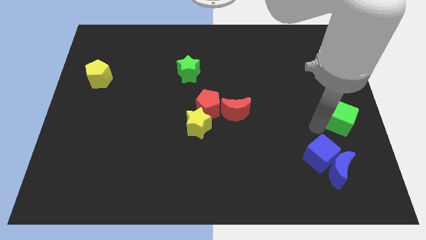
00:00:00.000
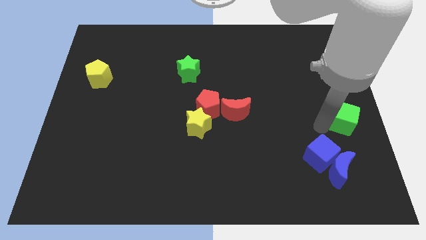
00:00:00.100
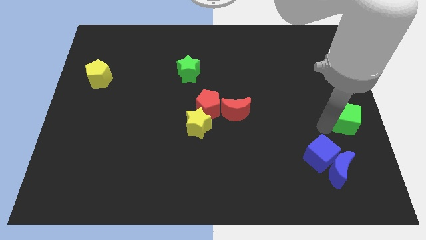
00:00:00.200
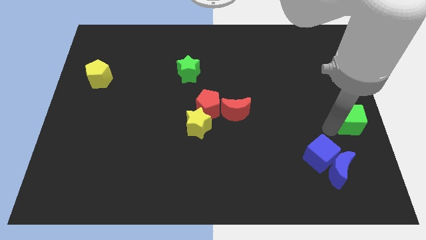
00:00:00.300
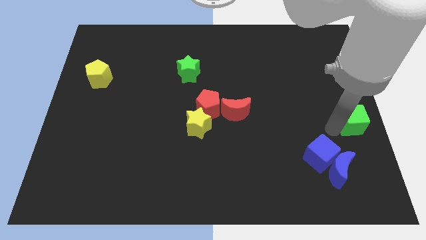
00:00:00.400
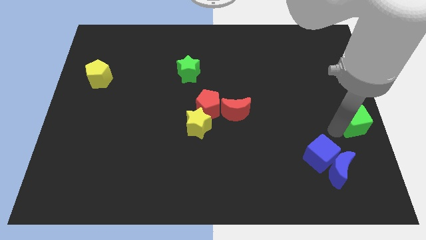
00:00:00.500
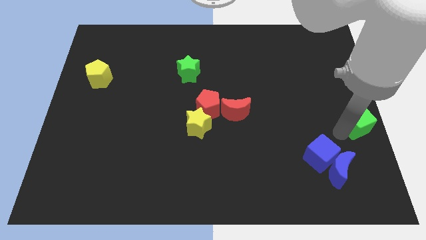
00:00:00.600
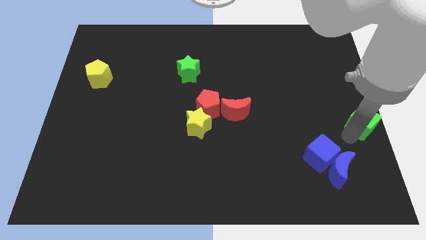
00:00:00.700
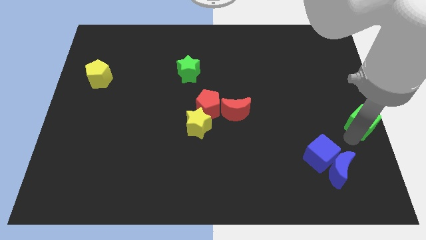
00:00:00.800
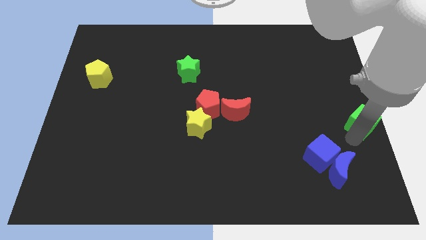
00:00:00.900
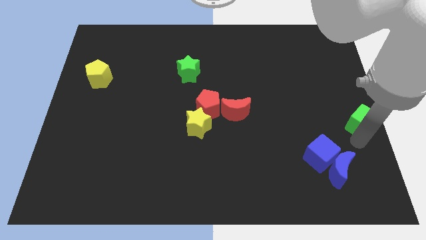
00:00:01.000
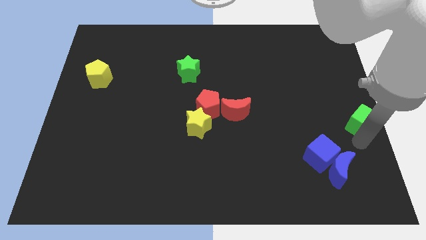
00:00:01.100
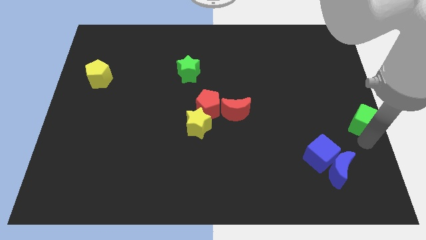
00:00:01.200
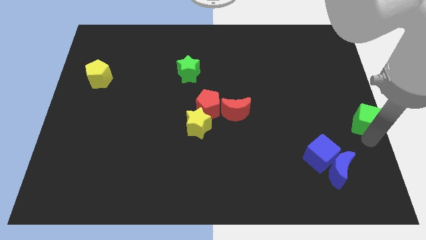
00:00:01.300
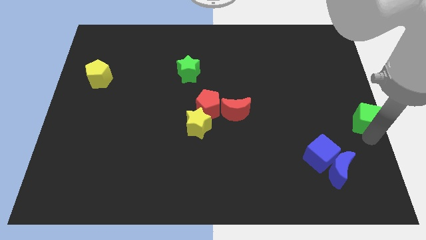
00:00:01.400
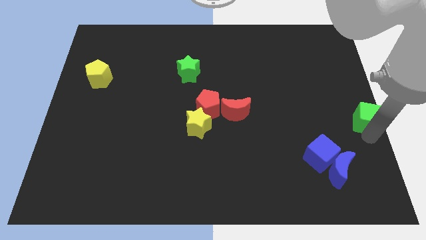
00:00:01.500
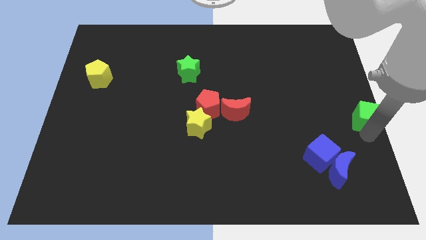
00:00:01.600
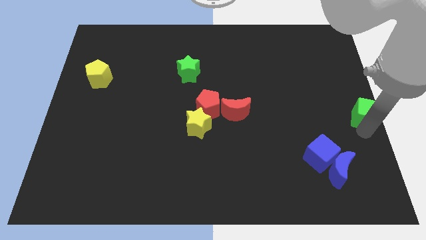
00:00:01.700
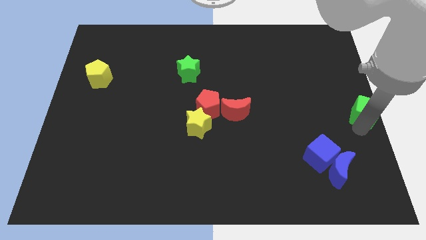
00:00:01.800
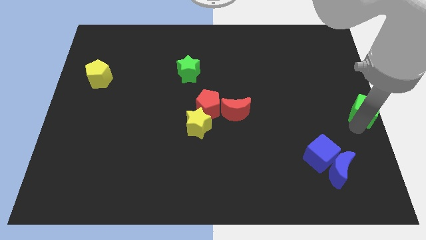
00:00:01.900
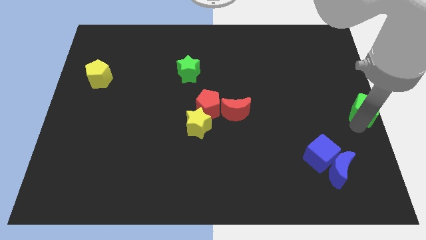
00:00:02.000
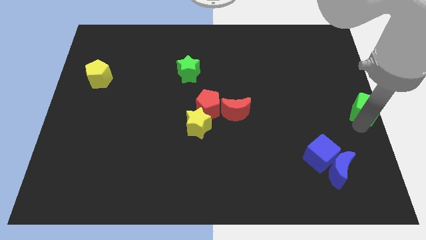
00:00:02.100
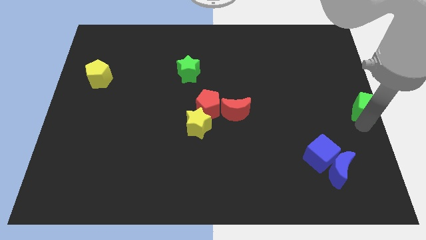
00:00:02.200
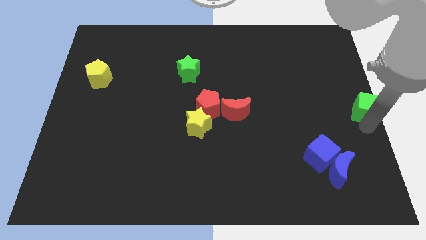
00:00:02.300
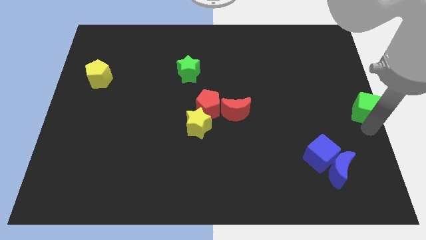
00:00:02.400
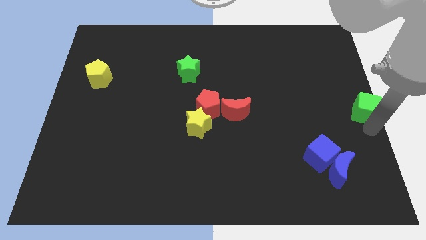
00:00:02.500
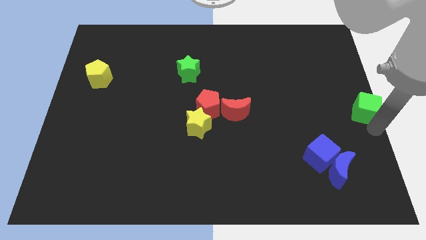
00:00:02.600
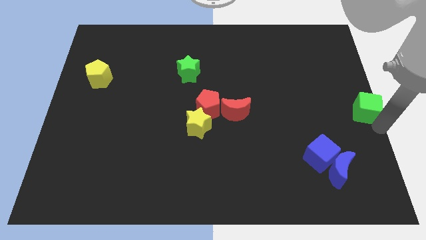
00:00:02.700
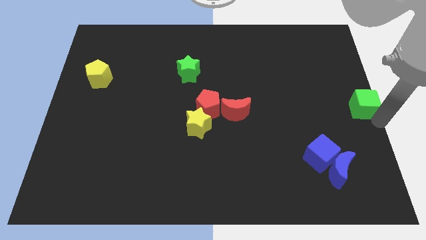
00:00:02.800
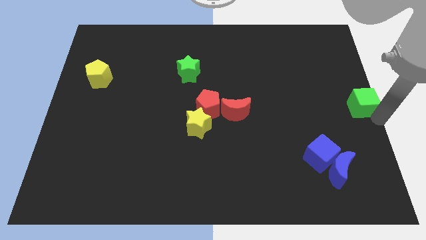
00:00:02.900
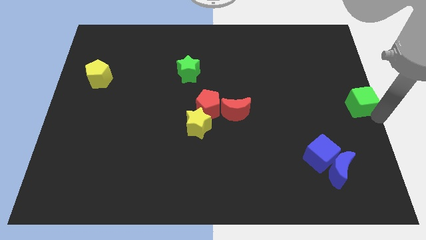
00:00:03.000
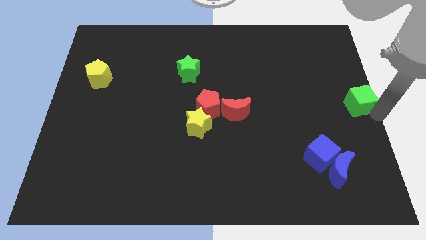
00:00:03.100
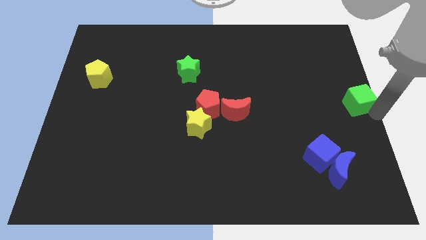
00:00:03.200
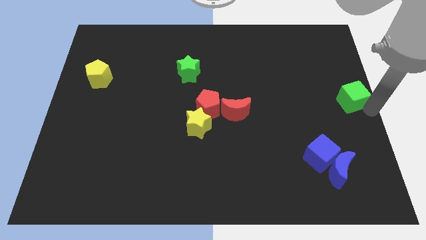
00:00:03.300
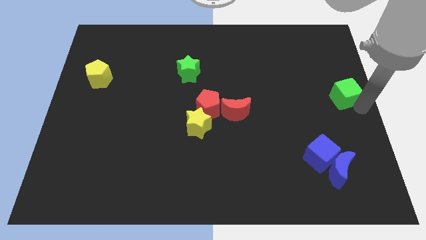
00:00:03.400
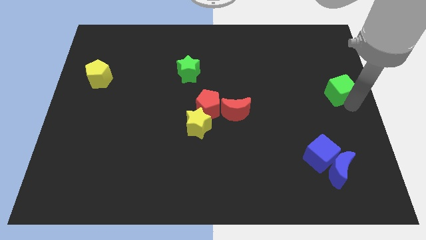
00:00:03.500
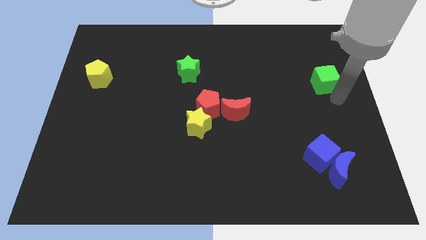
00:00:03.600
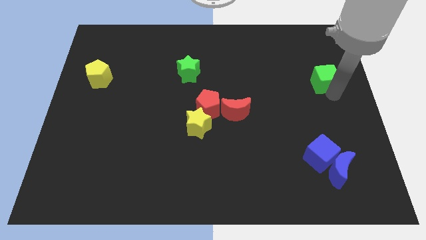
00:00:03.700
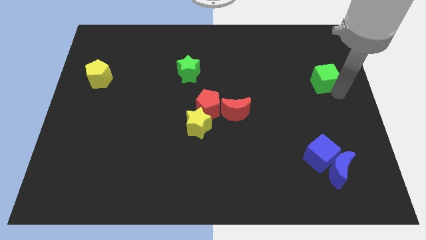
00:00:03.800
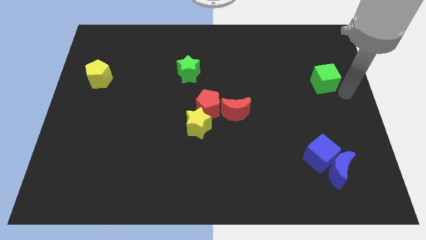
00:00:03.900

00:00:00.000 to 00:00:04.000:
push the green cube towards the top right of board

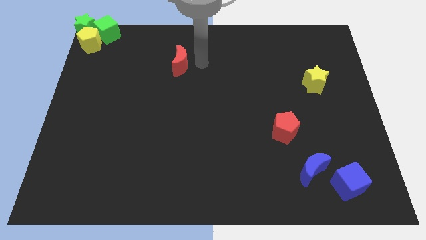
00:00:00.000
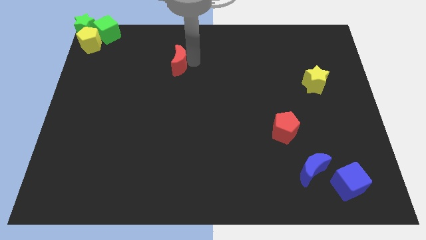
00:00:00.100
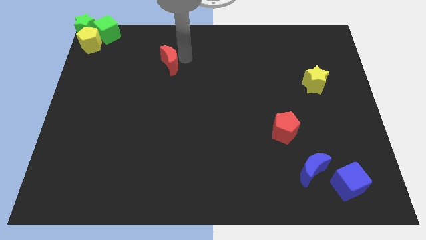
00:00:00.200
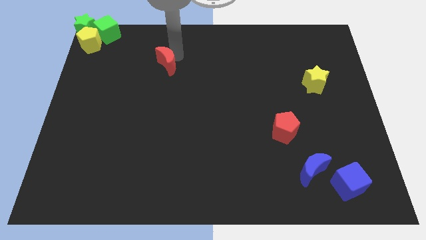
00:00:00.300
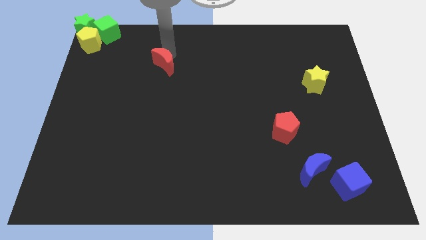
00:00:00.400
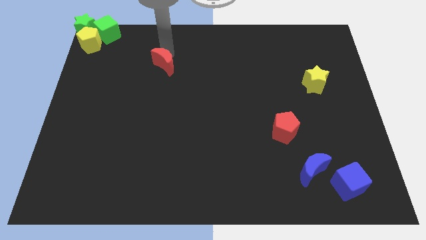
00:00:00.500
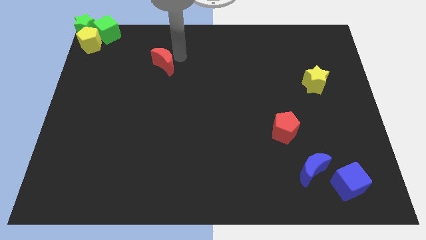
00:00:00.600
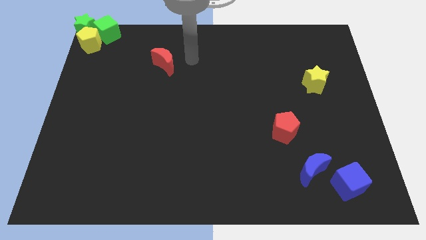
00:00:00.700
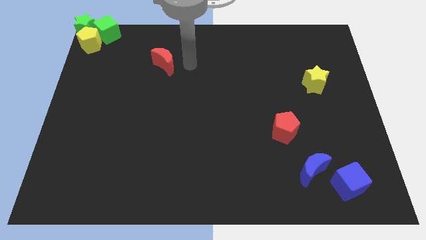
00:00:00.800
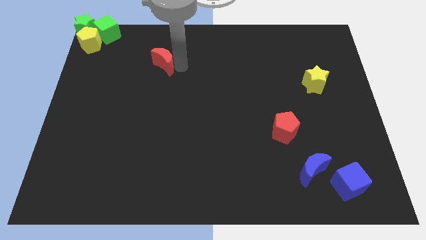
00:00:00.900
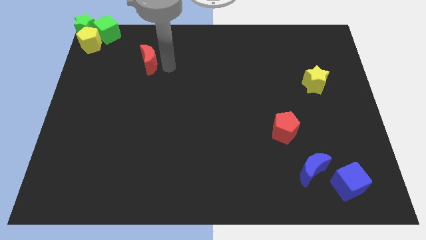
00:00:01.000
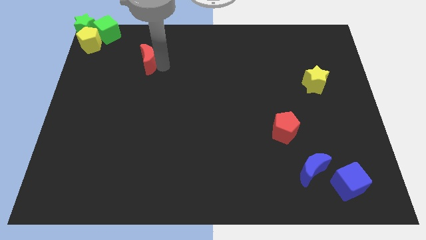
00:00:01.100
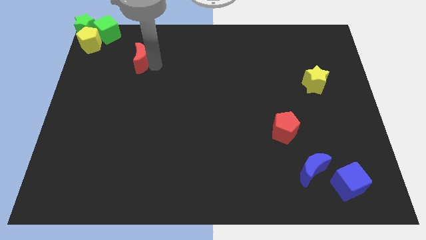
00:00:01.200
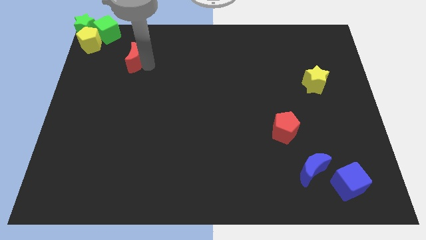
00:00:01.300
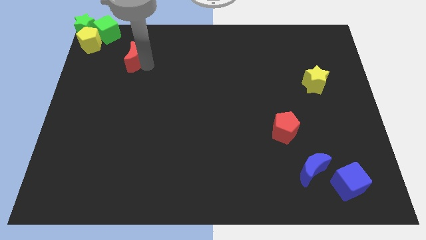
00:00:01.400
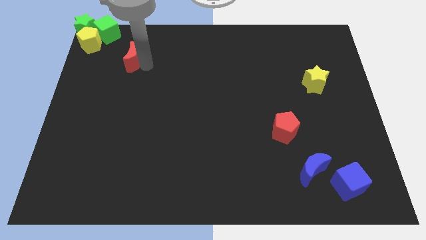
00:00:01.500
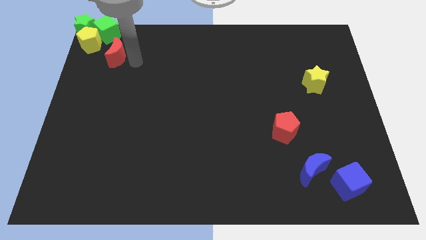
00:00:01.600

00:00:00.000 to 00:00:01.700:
move the red moon towards the yellow pentagon

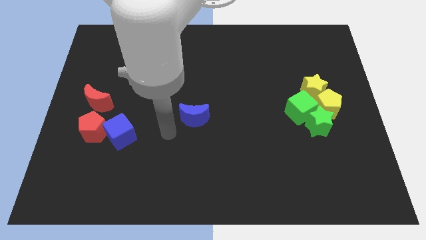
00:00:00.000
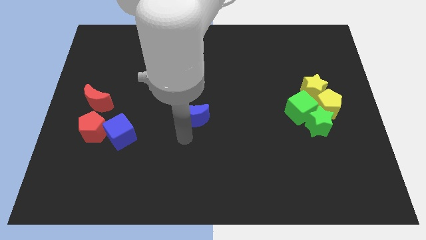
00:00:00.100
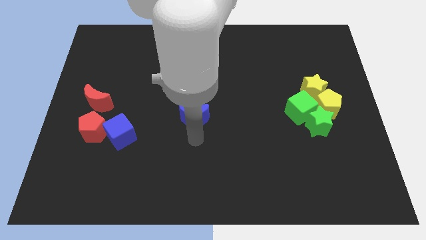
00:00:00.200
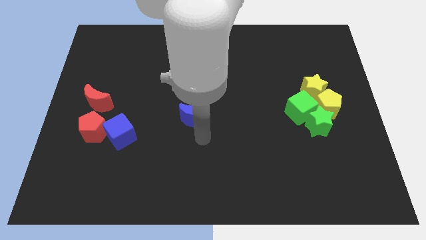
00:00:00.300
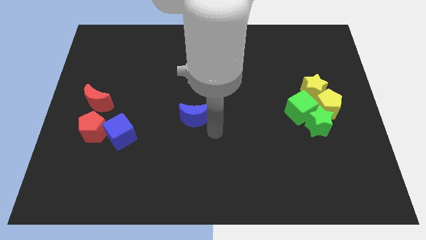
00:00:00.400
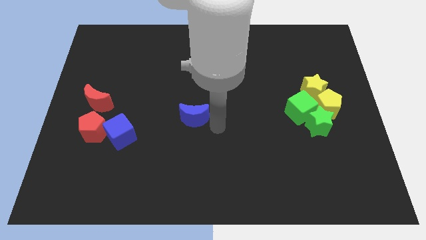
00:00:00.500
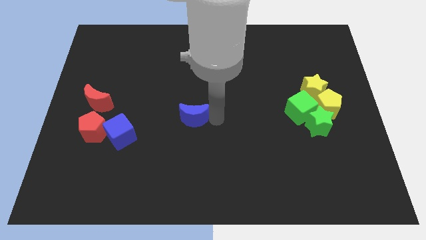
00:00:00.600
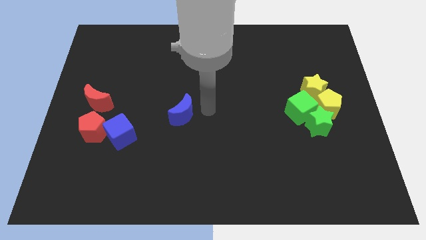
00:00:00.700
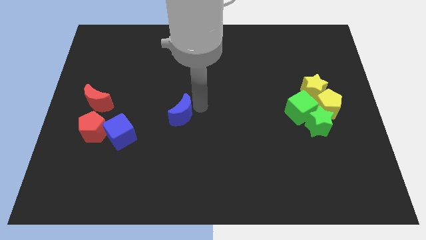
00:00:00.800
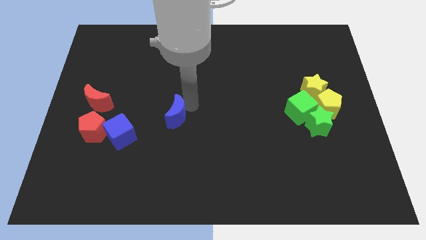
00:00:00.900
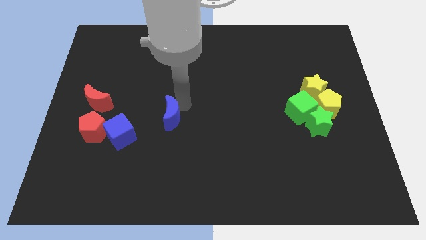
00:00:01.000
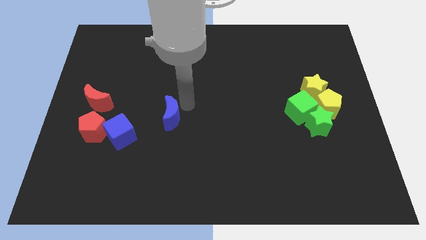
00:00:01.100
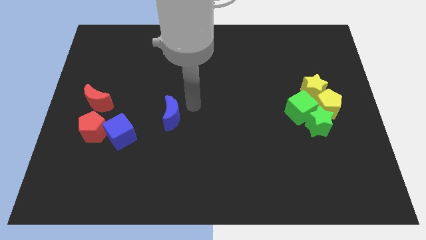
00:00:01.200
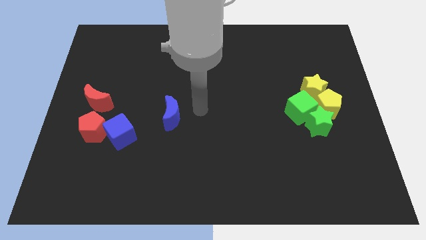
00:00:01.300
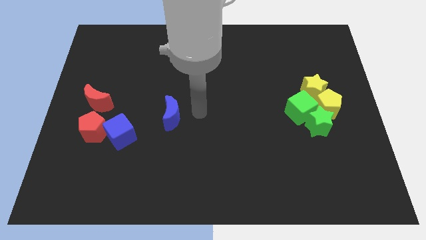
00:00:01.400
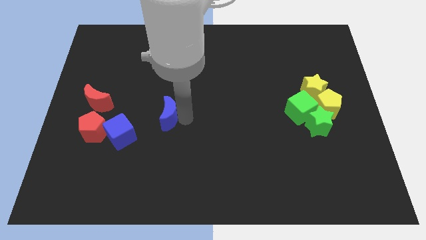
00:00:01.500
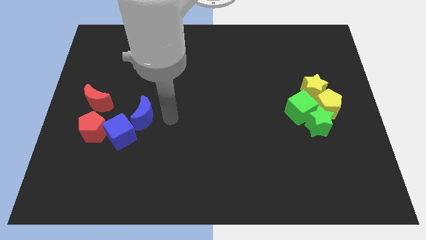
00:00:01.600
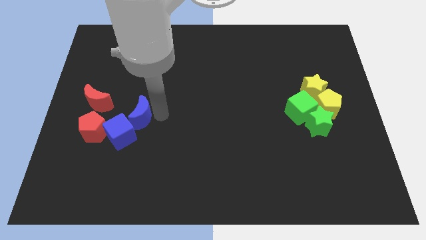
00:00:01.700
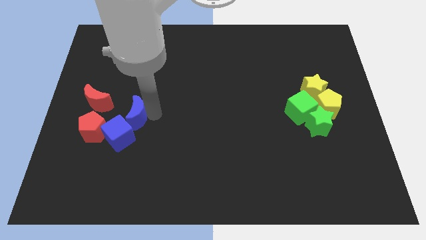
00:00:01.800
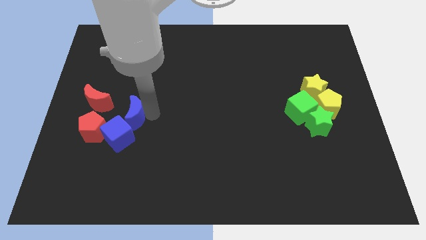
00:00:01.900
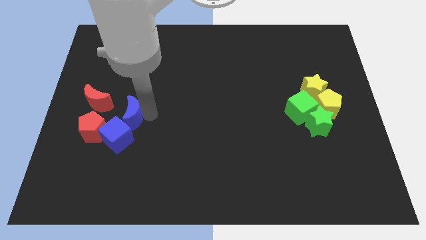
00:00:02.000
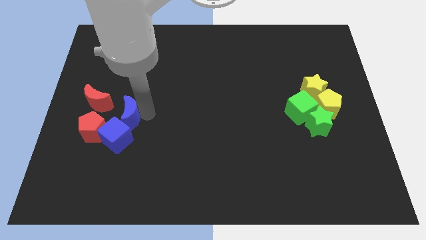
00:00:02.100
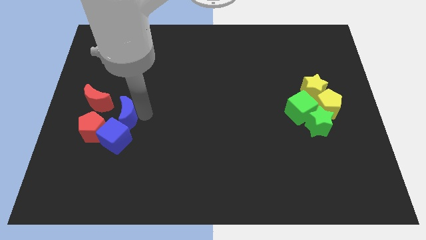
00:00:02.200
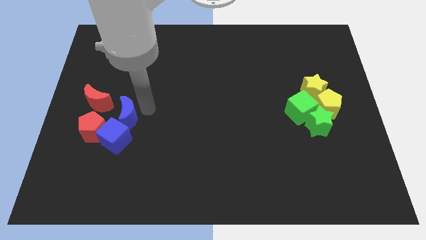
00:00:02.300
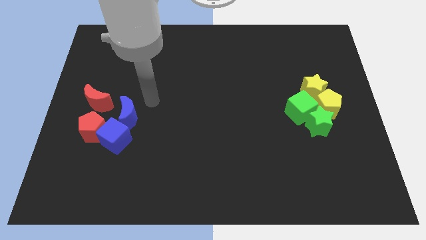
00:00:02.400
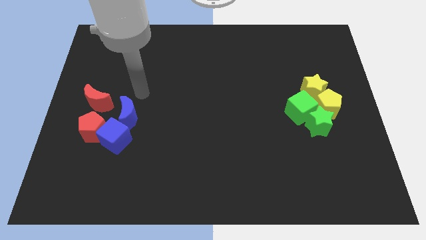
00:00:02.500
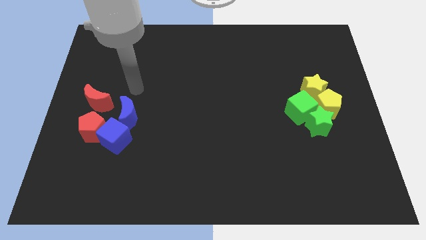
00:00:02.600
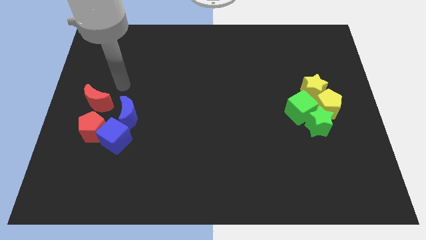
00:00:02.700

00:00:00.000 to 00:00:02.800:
move blue moon above blue cube

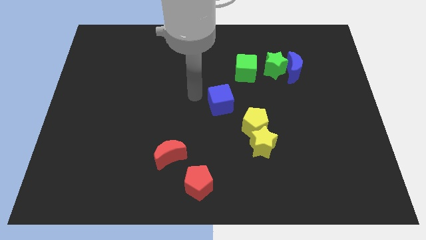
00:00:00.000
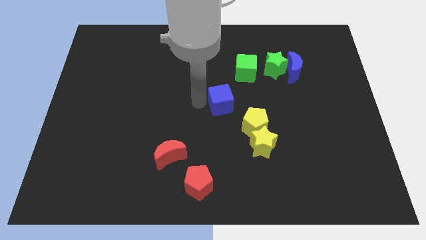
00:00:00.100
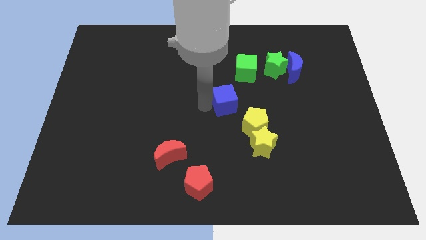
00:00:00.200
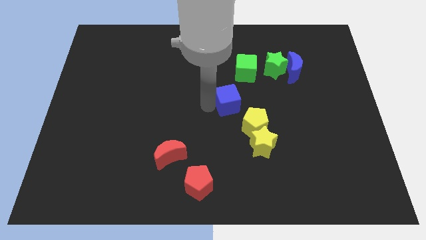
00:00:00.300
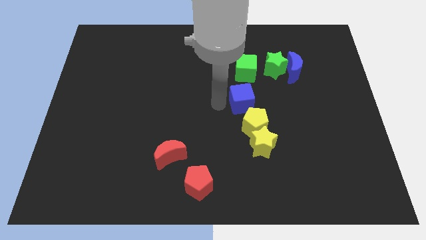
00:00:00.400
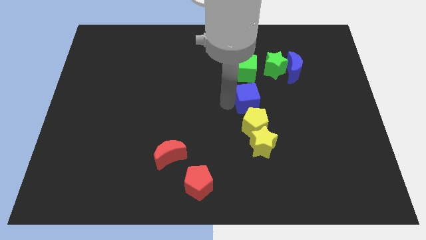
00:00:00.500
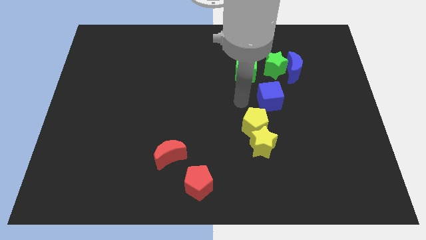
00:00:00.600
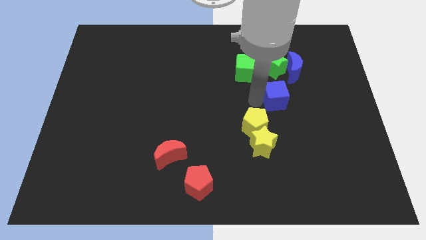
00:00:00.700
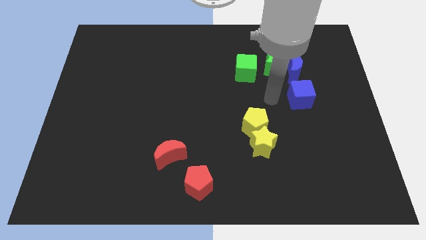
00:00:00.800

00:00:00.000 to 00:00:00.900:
move blue cube below blue moon
